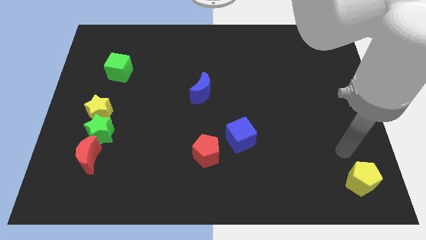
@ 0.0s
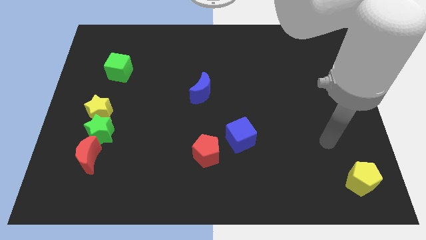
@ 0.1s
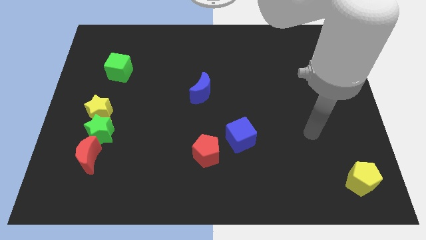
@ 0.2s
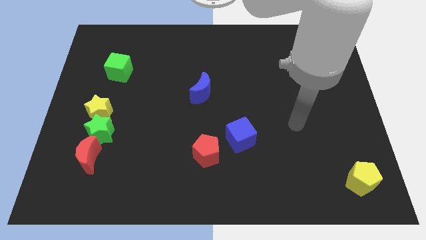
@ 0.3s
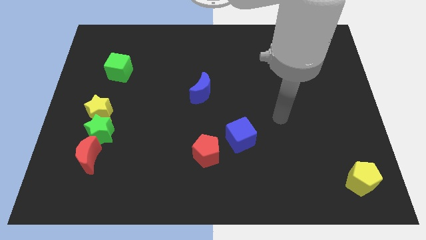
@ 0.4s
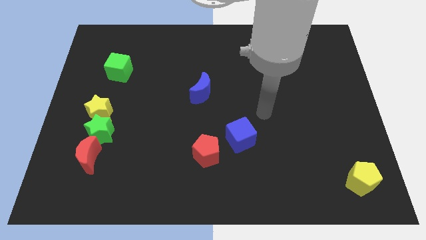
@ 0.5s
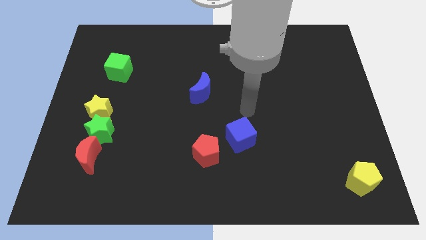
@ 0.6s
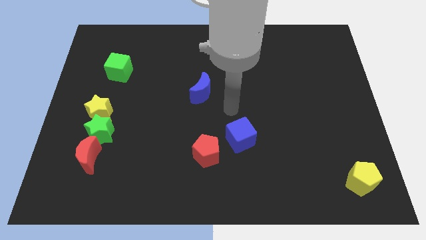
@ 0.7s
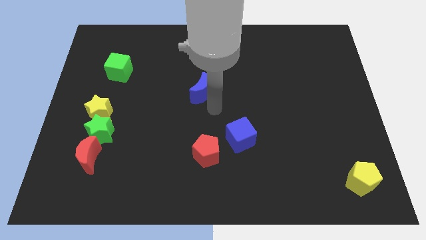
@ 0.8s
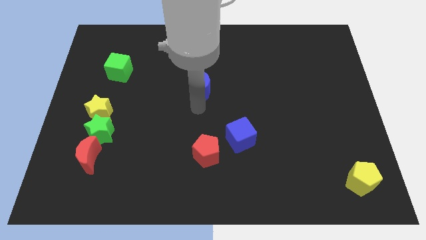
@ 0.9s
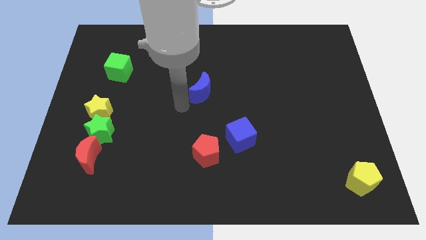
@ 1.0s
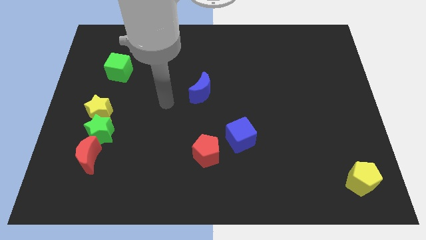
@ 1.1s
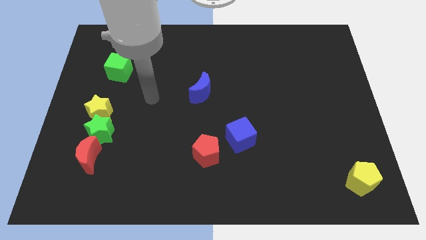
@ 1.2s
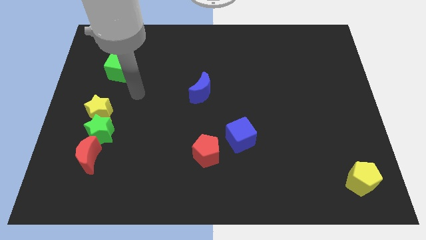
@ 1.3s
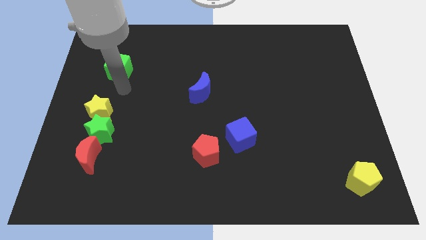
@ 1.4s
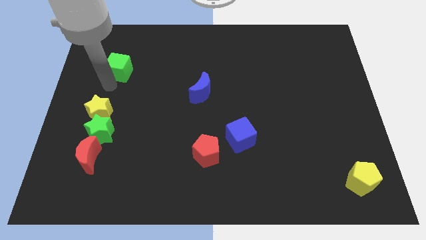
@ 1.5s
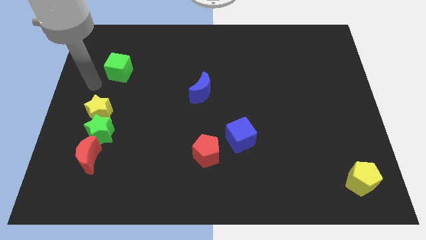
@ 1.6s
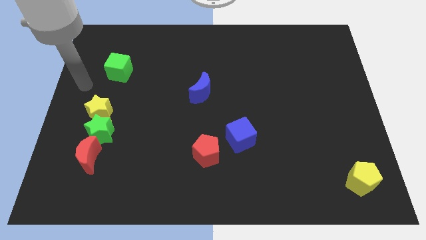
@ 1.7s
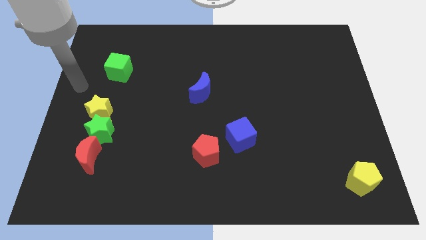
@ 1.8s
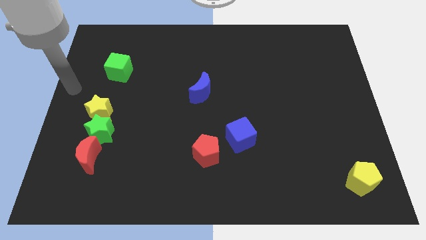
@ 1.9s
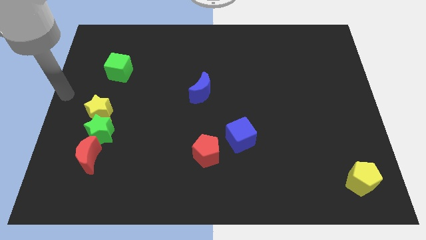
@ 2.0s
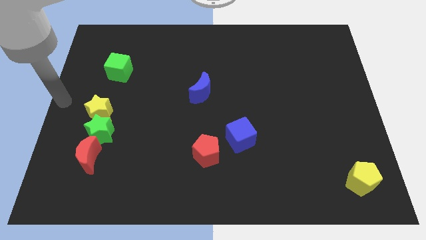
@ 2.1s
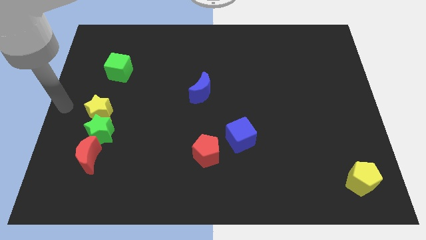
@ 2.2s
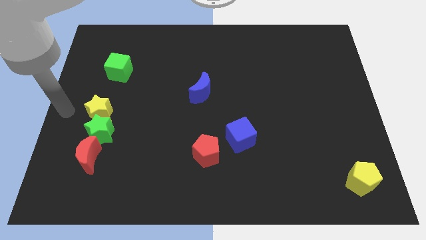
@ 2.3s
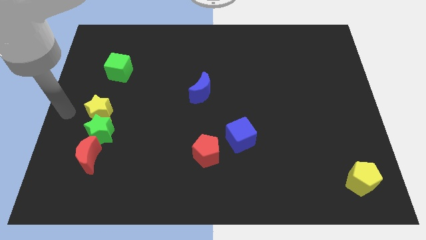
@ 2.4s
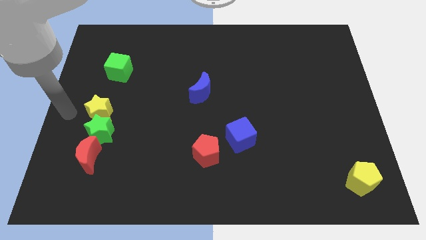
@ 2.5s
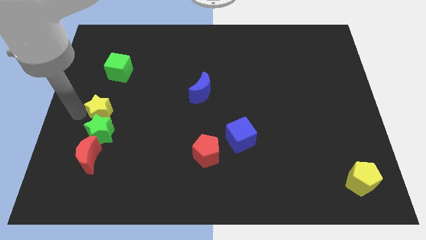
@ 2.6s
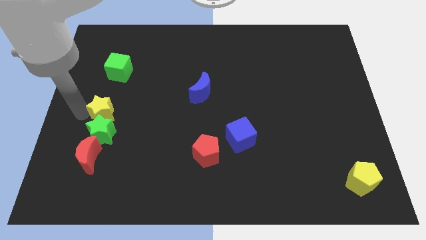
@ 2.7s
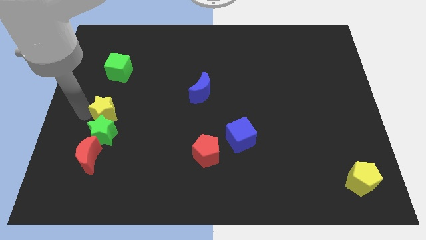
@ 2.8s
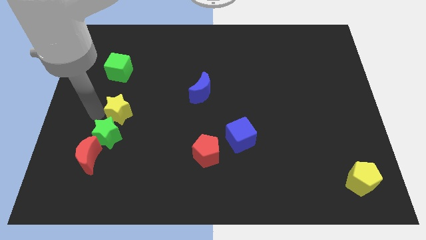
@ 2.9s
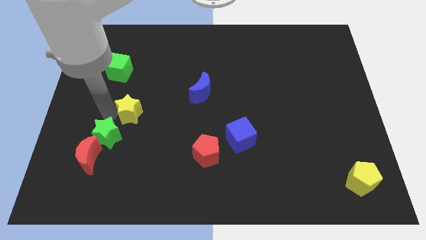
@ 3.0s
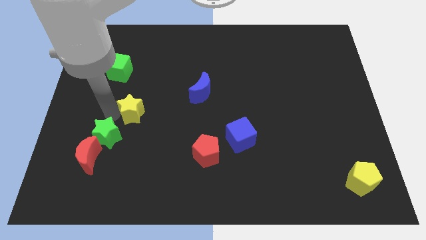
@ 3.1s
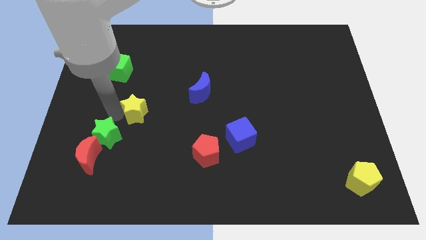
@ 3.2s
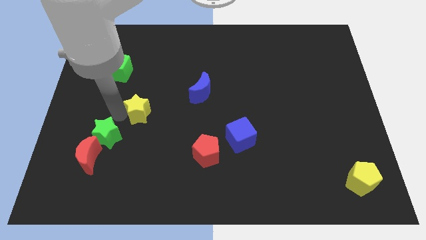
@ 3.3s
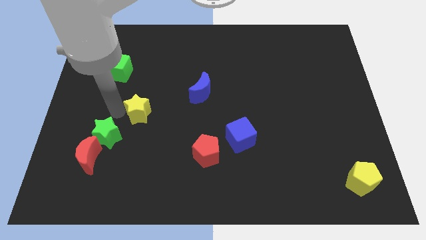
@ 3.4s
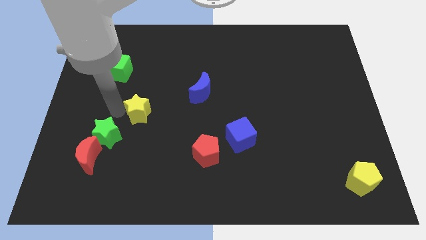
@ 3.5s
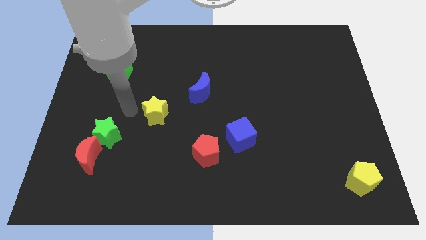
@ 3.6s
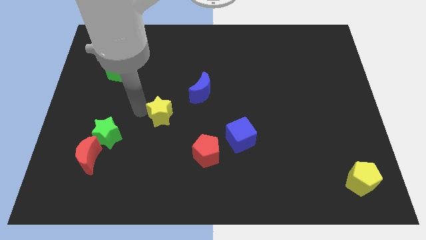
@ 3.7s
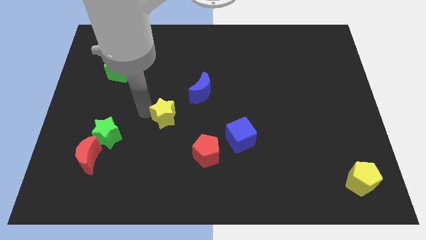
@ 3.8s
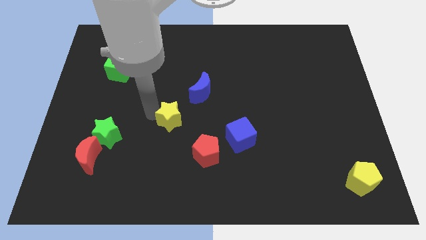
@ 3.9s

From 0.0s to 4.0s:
move the yellow star slightly right

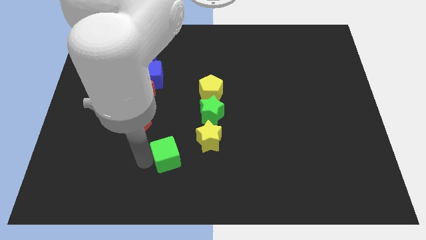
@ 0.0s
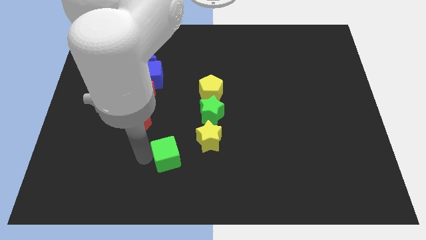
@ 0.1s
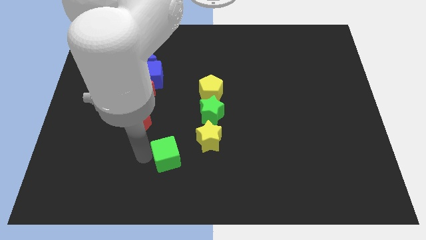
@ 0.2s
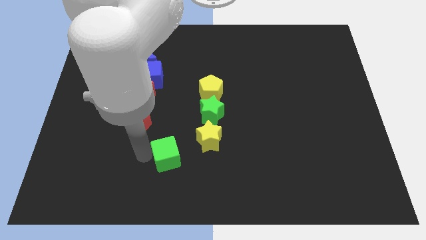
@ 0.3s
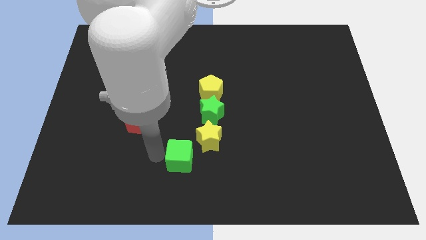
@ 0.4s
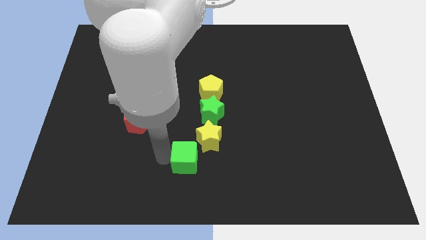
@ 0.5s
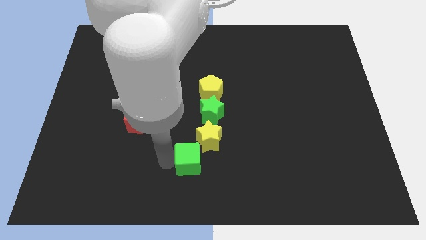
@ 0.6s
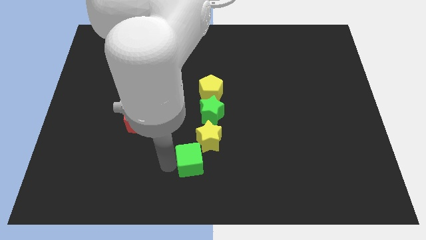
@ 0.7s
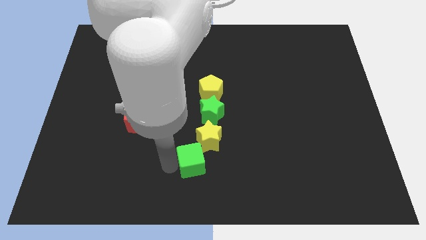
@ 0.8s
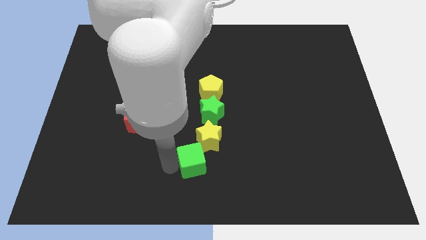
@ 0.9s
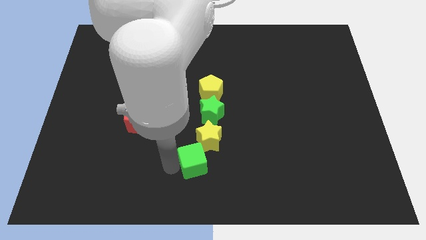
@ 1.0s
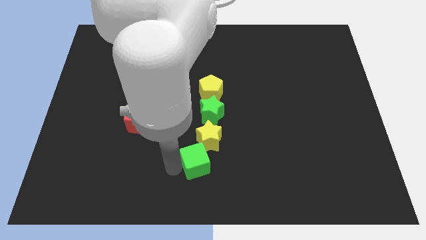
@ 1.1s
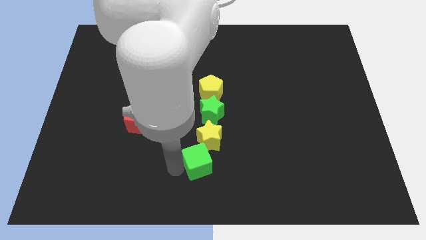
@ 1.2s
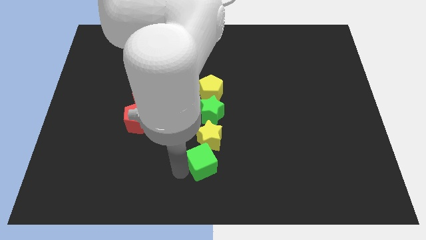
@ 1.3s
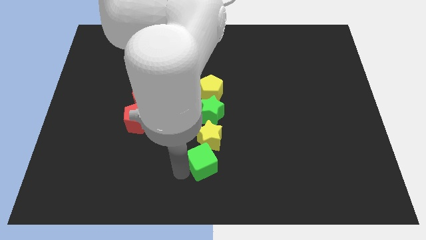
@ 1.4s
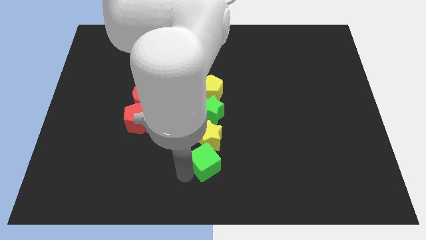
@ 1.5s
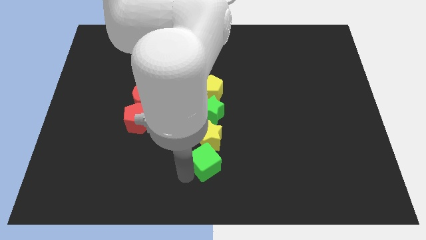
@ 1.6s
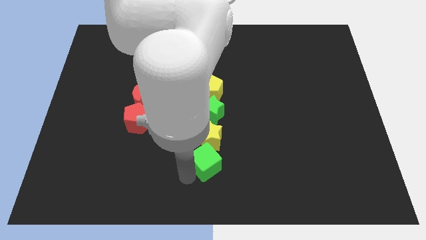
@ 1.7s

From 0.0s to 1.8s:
place the green cube below the yellow star

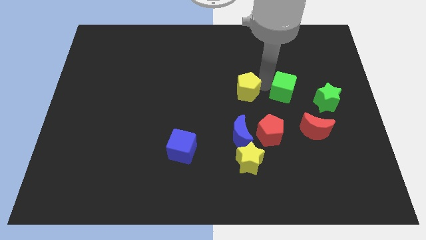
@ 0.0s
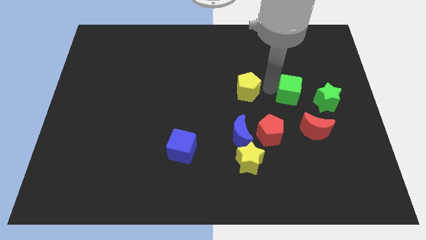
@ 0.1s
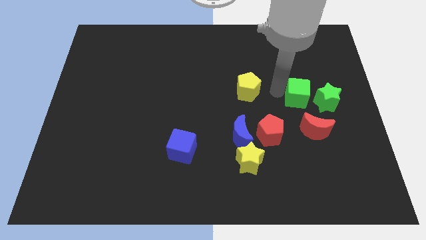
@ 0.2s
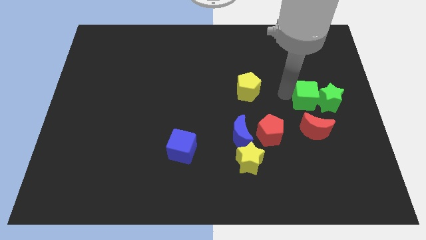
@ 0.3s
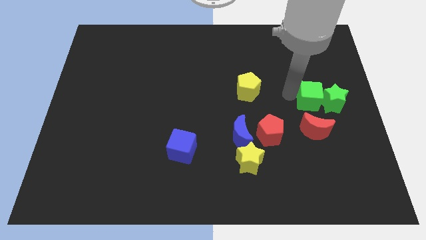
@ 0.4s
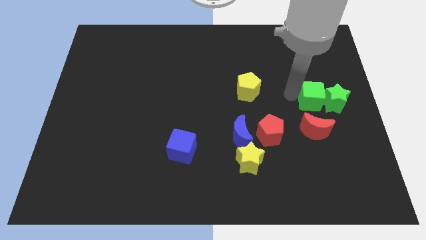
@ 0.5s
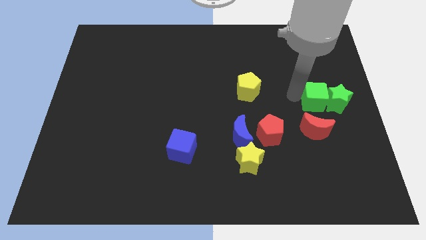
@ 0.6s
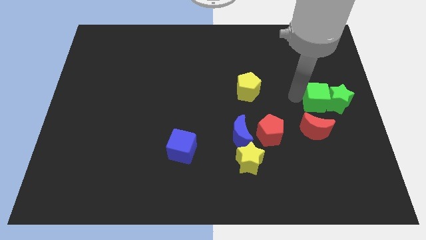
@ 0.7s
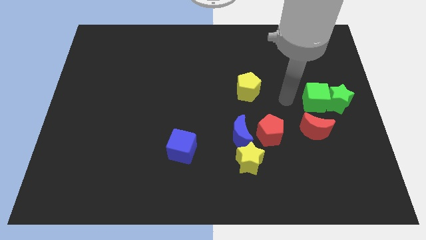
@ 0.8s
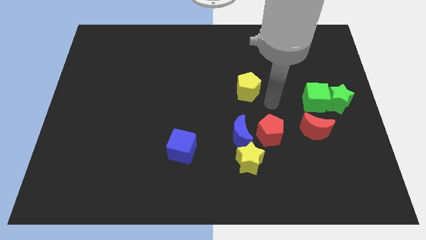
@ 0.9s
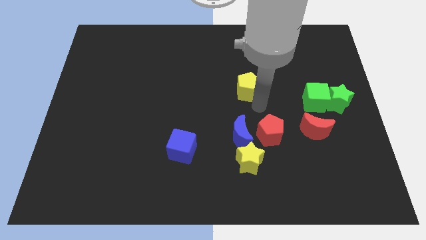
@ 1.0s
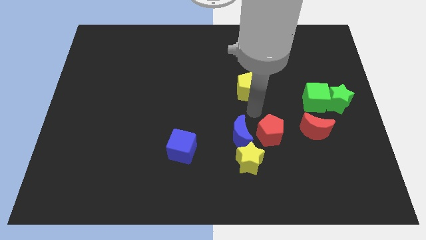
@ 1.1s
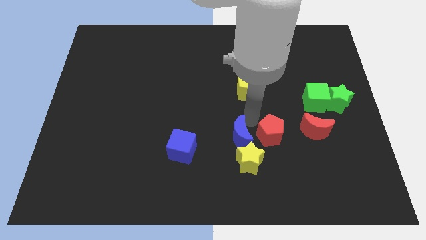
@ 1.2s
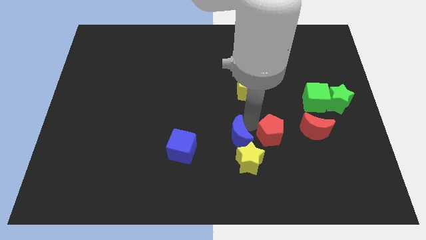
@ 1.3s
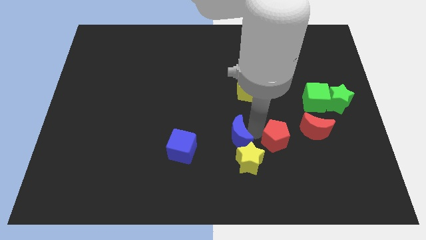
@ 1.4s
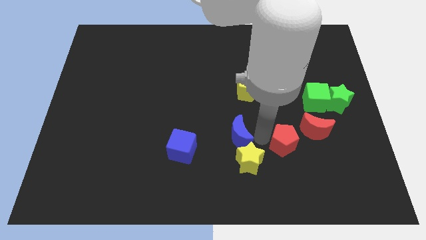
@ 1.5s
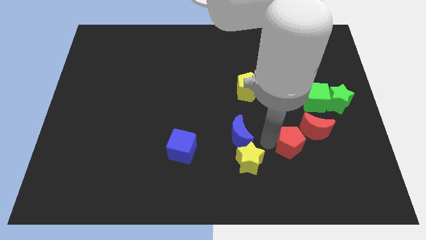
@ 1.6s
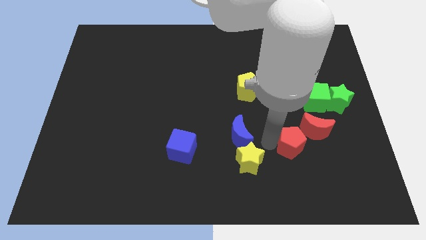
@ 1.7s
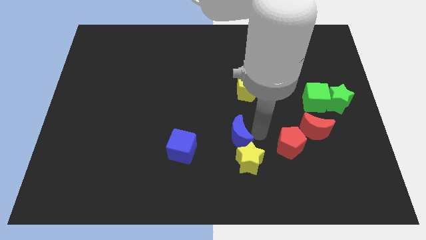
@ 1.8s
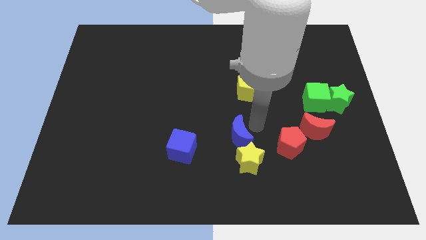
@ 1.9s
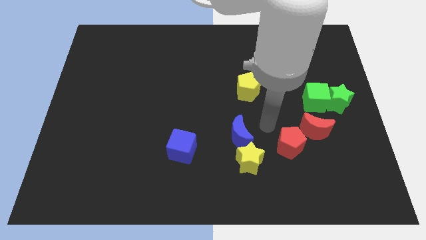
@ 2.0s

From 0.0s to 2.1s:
place your arm in between the yellow pentagon and red pentagon

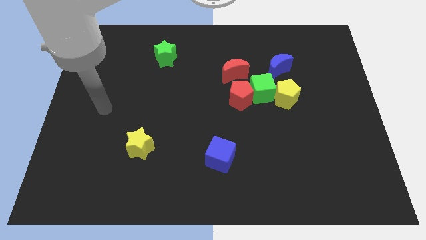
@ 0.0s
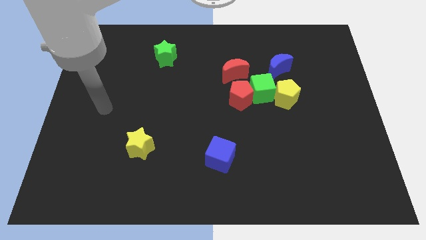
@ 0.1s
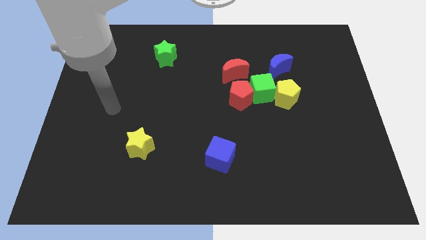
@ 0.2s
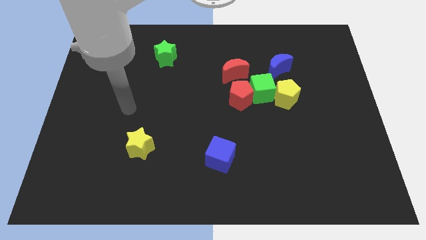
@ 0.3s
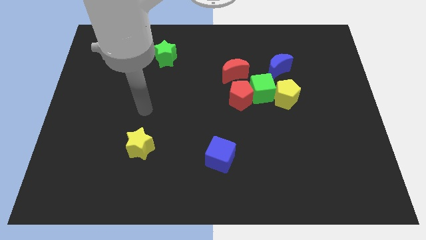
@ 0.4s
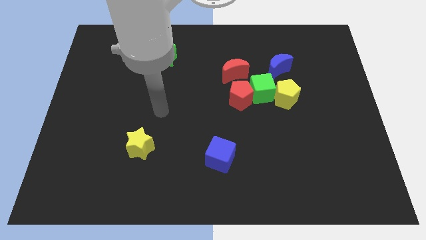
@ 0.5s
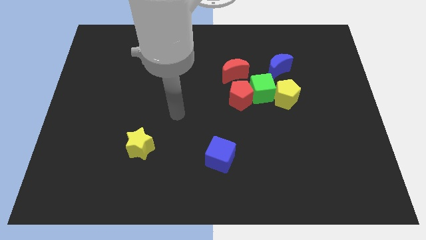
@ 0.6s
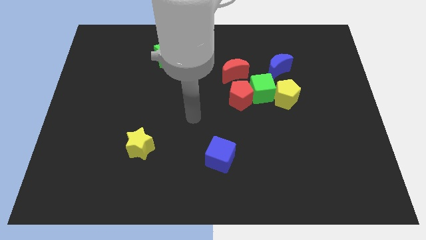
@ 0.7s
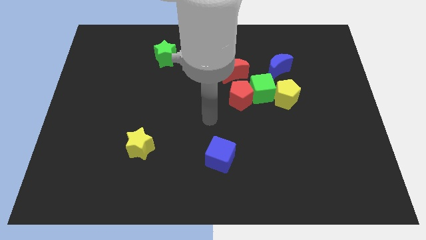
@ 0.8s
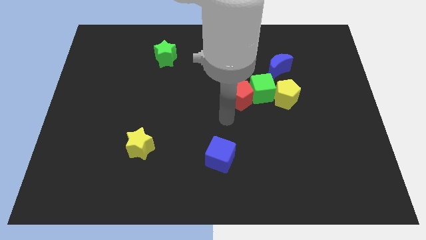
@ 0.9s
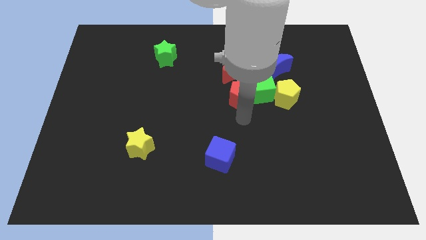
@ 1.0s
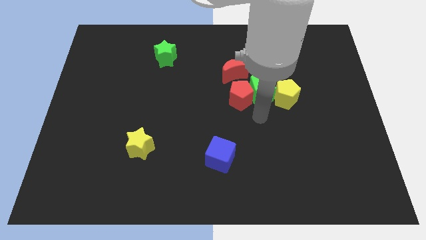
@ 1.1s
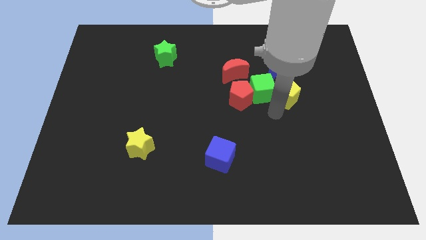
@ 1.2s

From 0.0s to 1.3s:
move the arm at the bottom of the green cube
